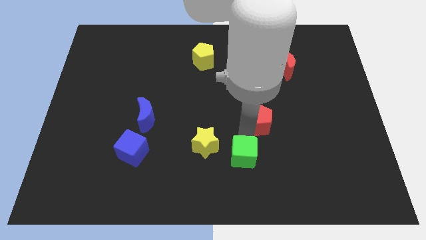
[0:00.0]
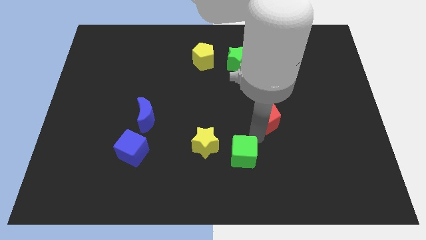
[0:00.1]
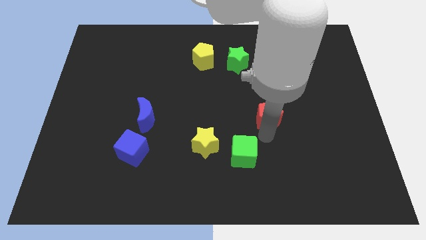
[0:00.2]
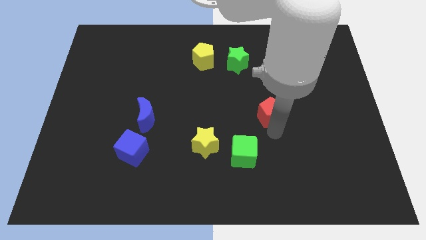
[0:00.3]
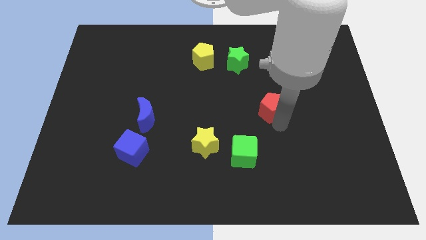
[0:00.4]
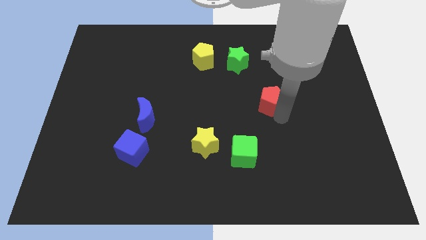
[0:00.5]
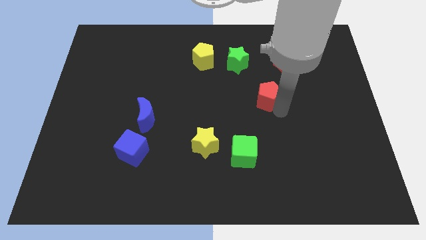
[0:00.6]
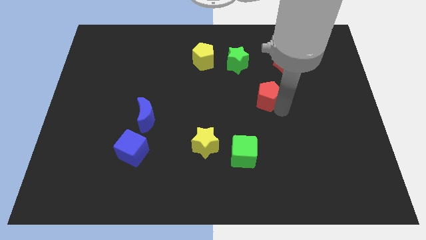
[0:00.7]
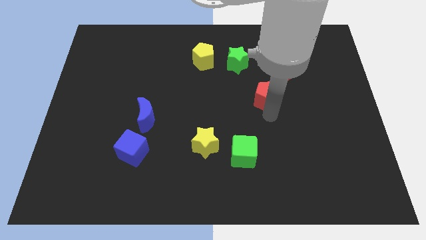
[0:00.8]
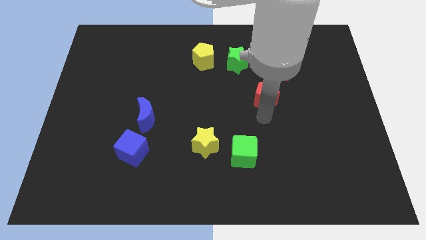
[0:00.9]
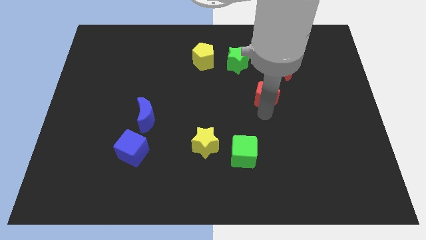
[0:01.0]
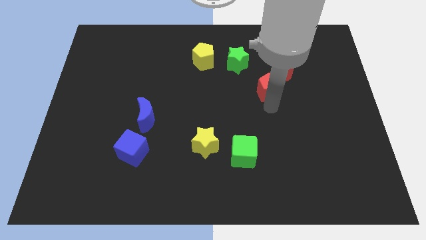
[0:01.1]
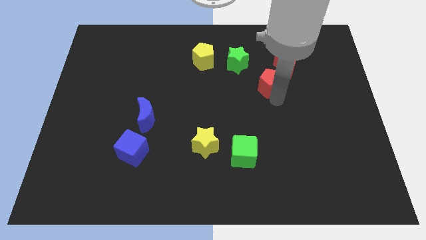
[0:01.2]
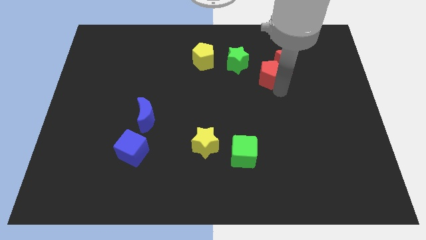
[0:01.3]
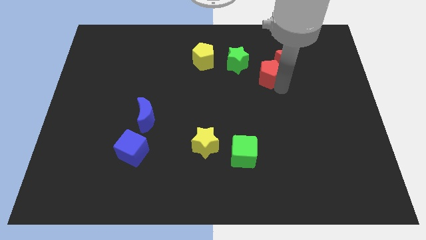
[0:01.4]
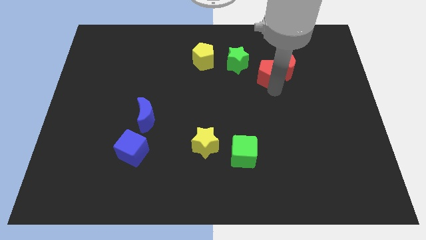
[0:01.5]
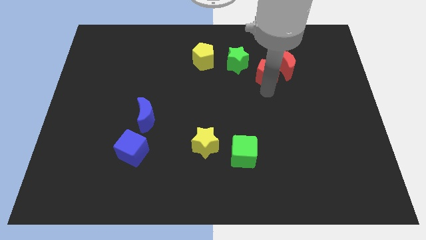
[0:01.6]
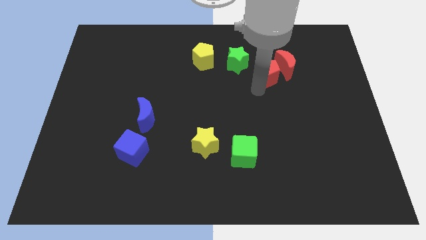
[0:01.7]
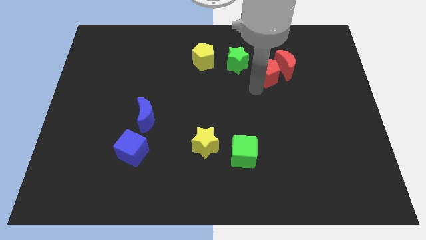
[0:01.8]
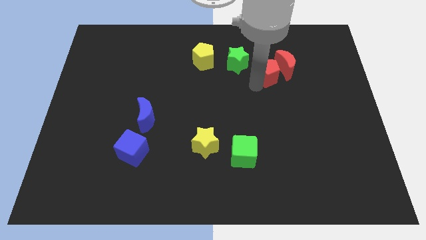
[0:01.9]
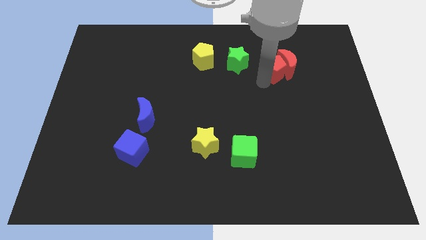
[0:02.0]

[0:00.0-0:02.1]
push the red pentagon into the red crescent

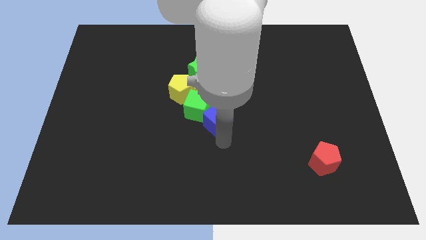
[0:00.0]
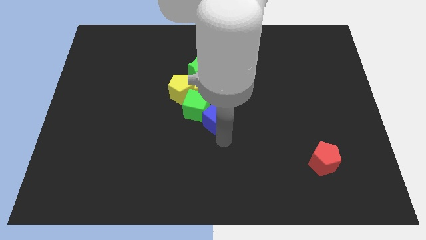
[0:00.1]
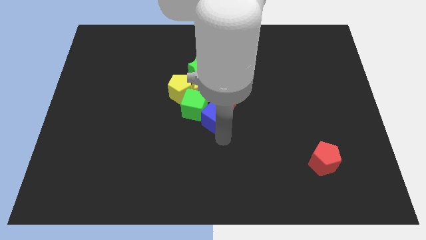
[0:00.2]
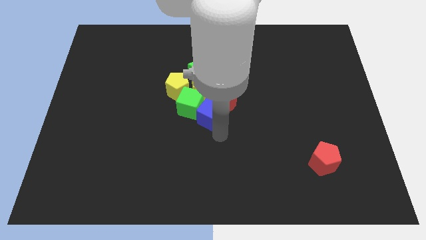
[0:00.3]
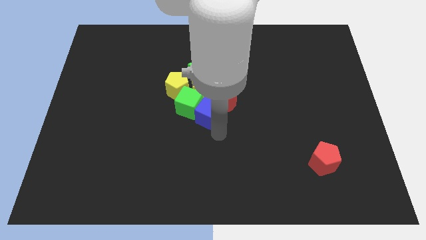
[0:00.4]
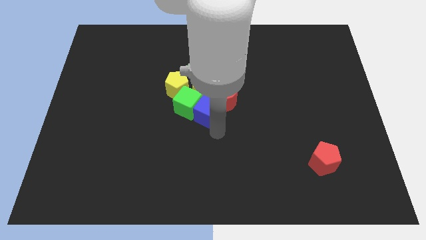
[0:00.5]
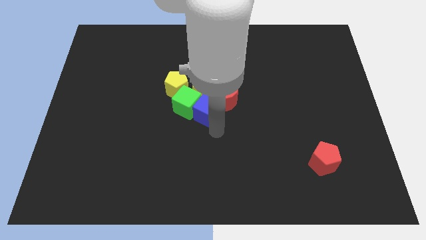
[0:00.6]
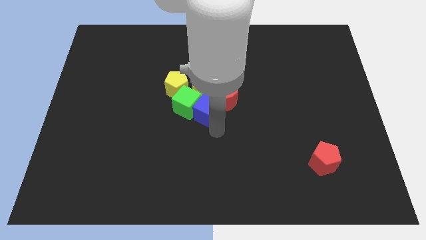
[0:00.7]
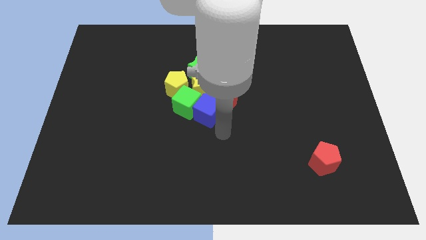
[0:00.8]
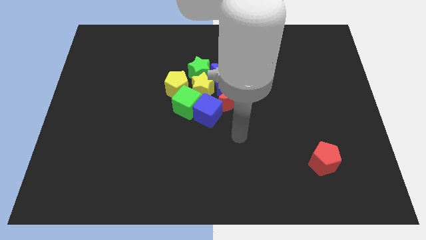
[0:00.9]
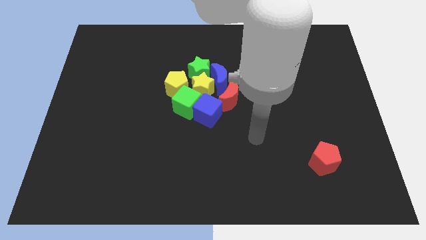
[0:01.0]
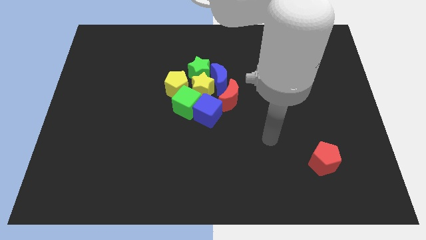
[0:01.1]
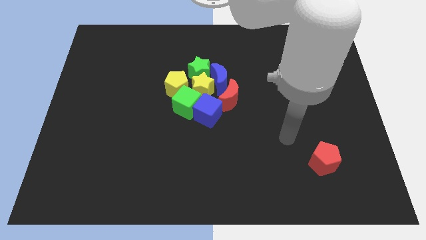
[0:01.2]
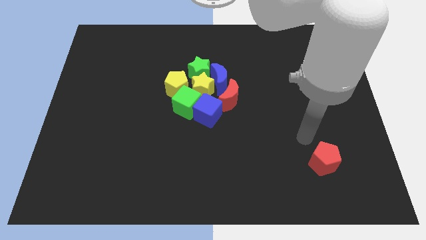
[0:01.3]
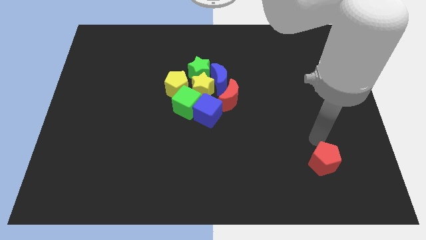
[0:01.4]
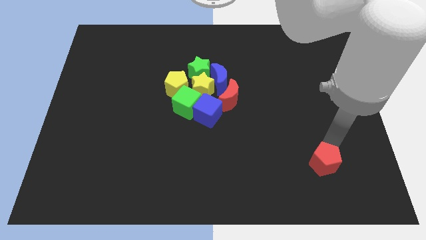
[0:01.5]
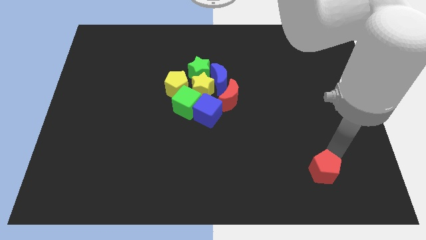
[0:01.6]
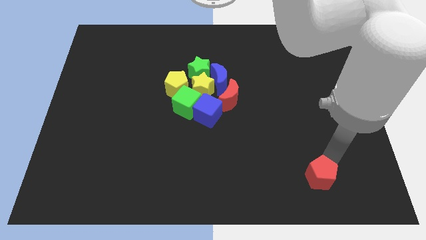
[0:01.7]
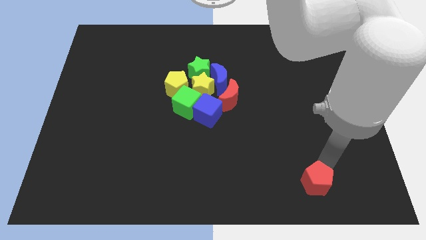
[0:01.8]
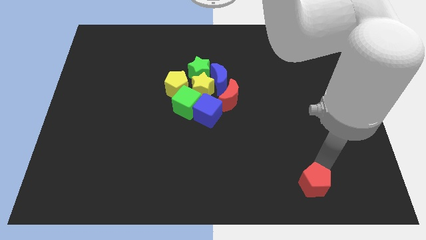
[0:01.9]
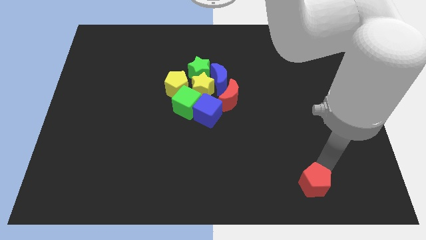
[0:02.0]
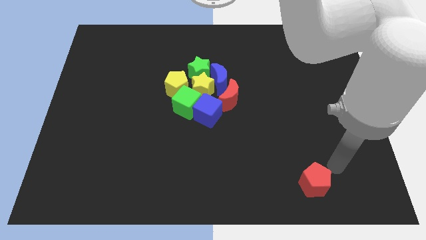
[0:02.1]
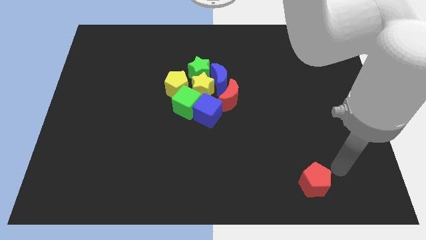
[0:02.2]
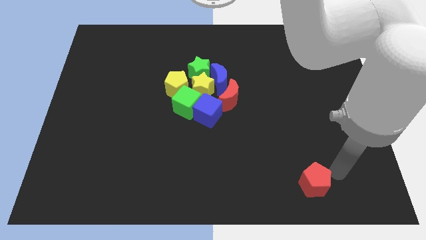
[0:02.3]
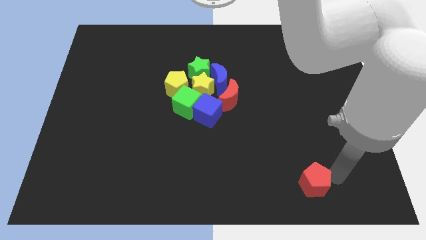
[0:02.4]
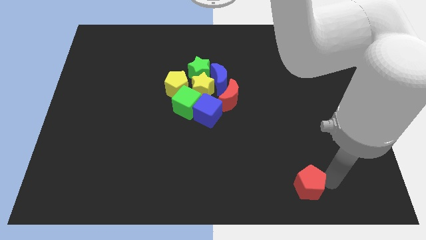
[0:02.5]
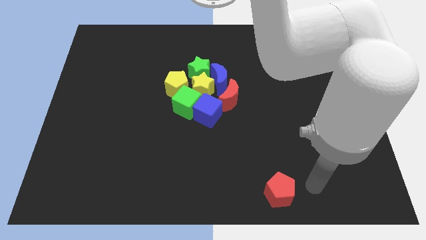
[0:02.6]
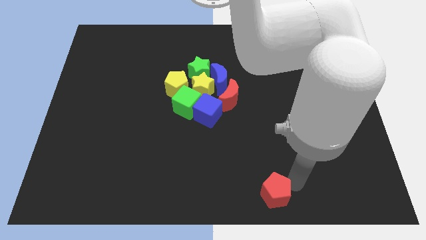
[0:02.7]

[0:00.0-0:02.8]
move arm near red pentagon

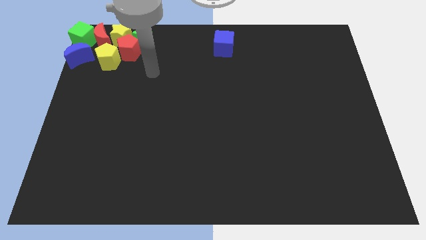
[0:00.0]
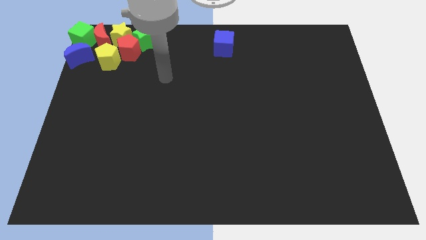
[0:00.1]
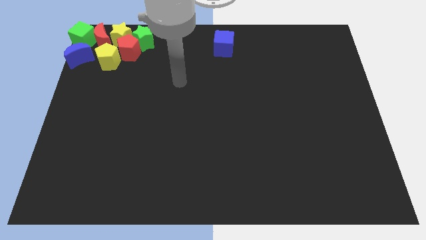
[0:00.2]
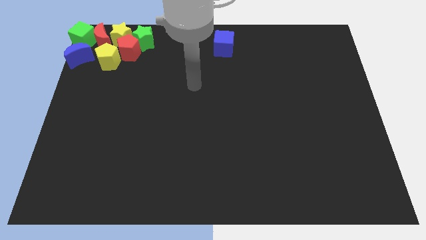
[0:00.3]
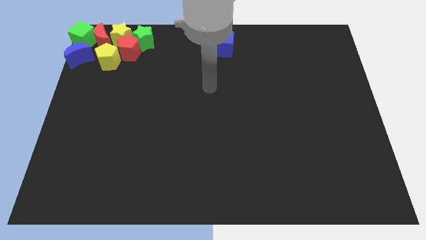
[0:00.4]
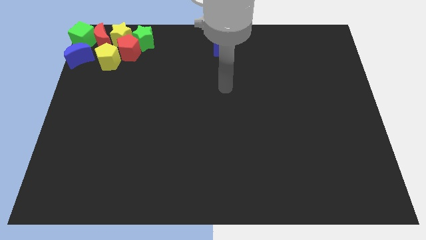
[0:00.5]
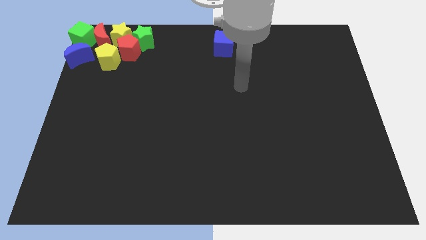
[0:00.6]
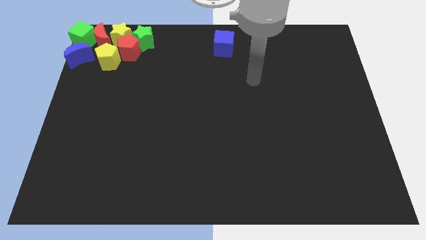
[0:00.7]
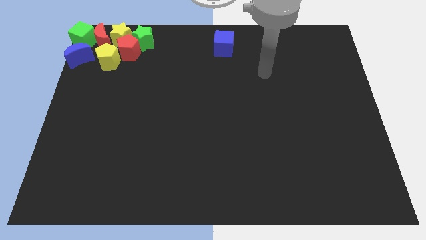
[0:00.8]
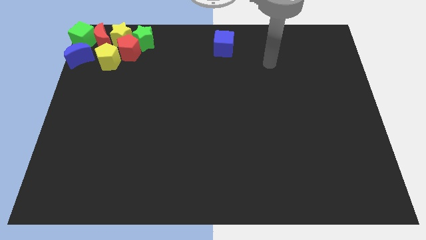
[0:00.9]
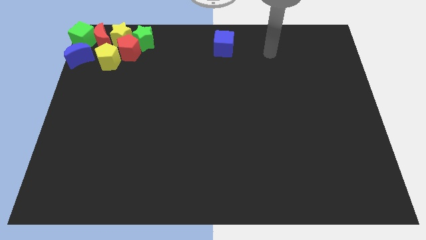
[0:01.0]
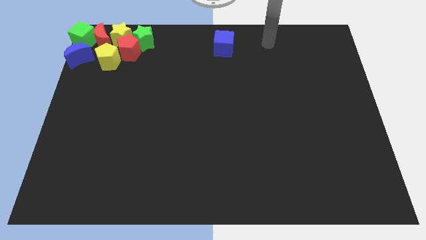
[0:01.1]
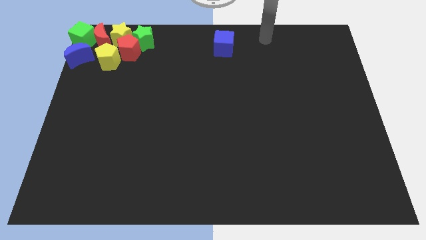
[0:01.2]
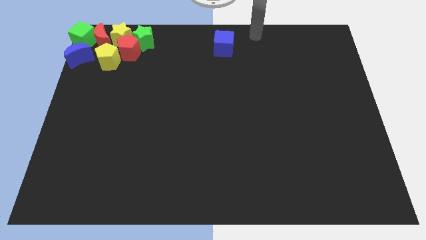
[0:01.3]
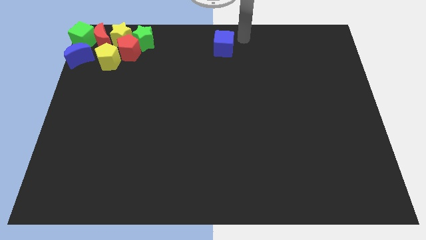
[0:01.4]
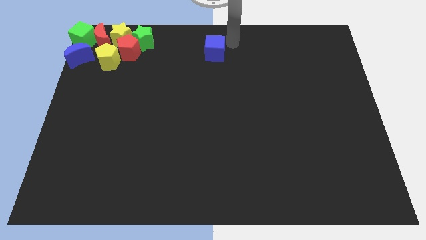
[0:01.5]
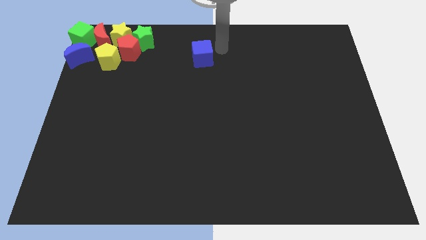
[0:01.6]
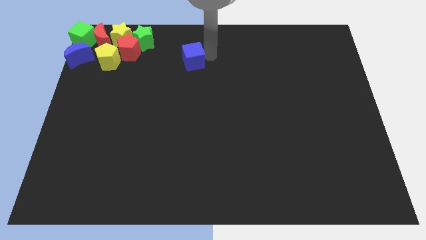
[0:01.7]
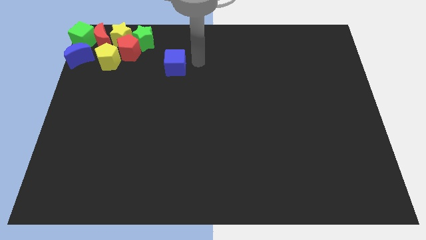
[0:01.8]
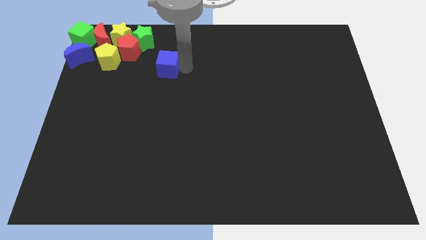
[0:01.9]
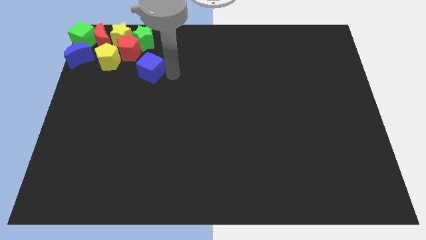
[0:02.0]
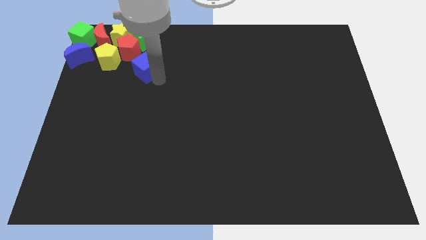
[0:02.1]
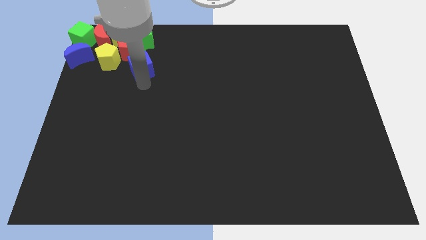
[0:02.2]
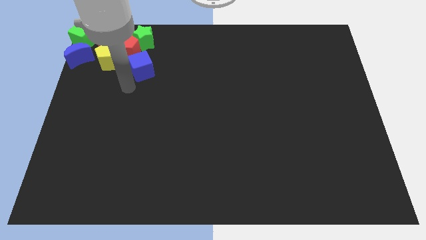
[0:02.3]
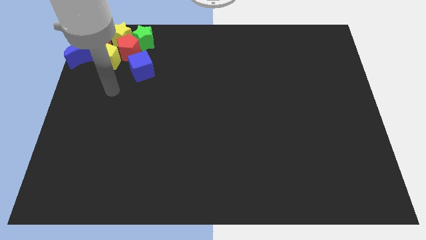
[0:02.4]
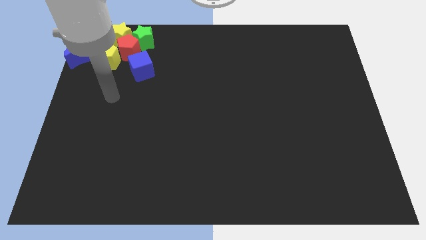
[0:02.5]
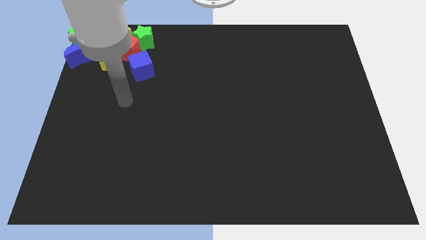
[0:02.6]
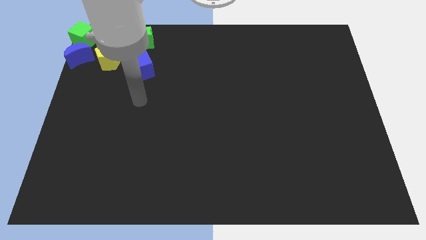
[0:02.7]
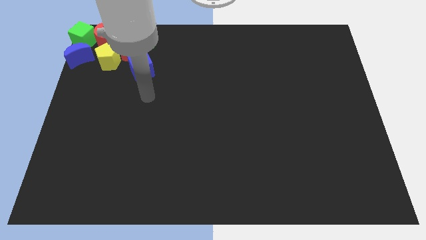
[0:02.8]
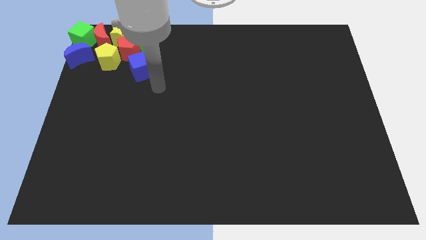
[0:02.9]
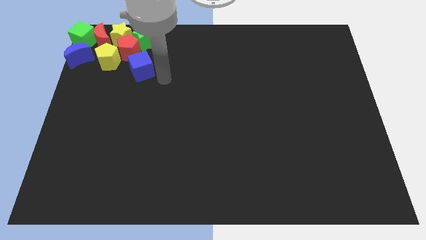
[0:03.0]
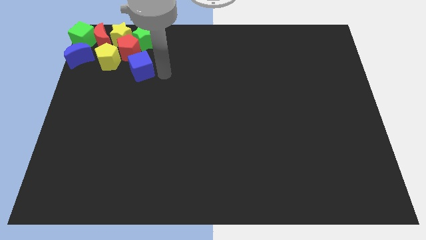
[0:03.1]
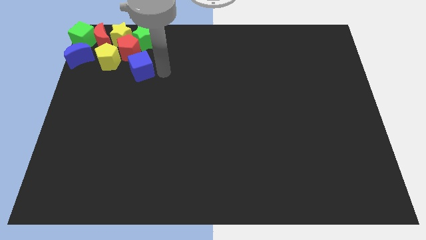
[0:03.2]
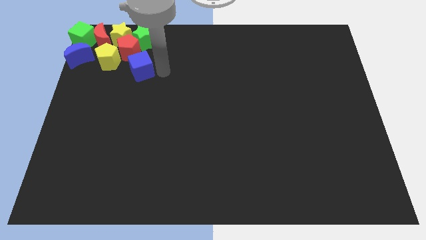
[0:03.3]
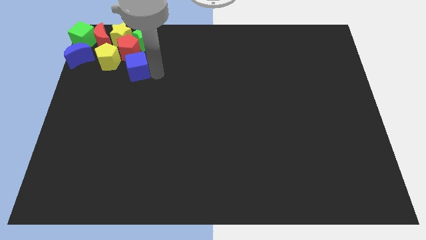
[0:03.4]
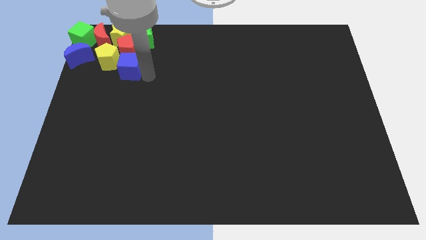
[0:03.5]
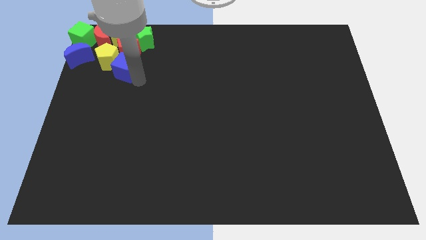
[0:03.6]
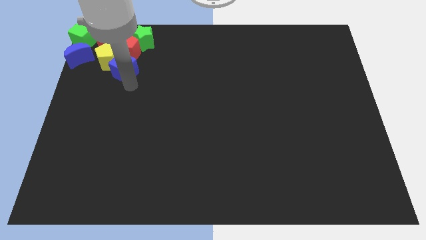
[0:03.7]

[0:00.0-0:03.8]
move the blue cube towards group of blocks

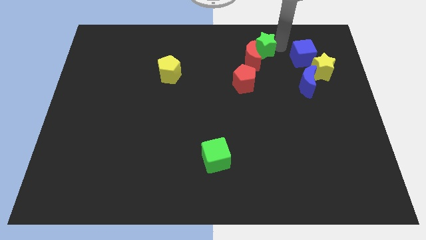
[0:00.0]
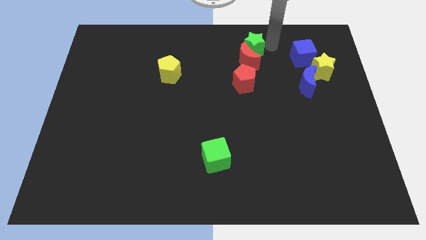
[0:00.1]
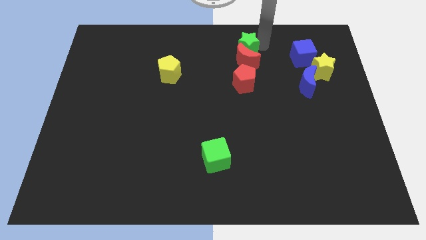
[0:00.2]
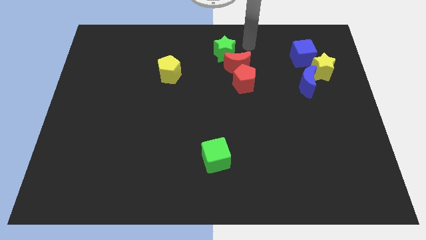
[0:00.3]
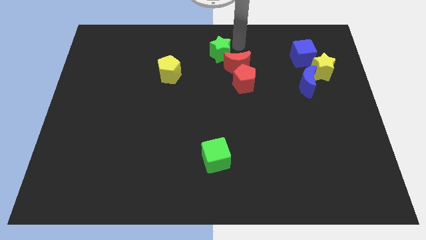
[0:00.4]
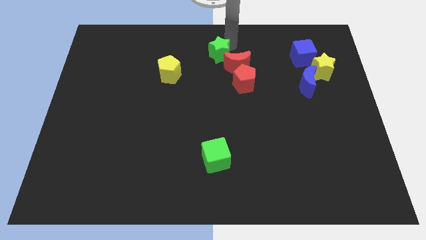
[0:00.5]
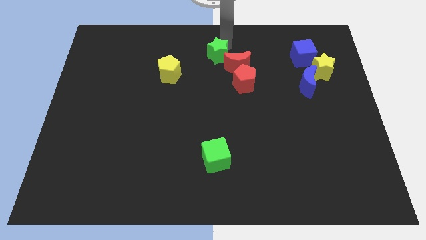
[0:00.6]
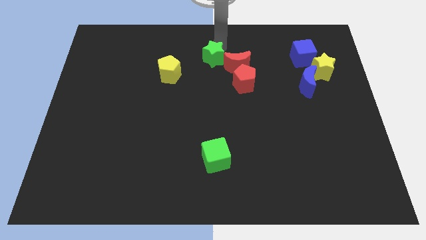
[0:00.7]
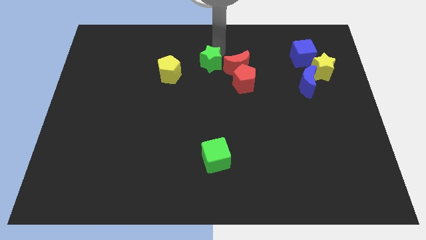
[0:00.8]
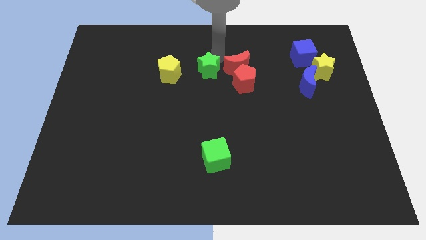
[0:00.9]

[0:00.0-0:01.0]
push the green star to the left of red crescent
